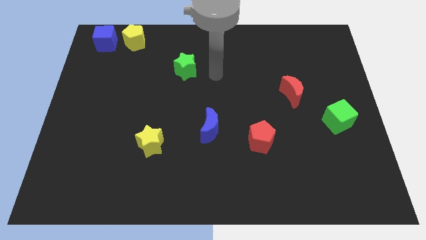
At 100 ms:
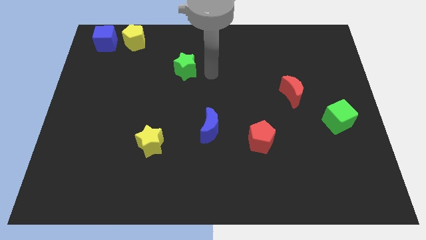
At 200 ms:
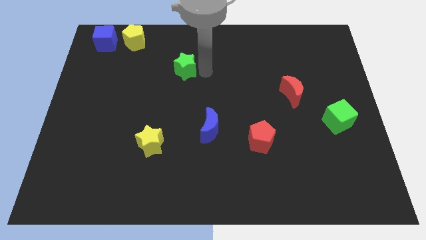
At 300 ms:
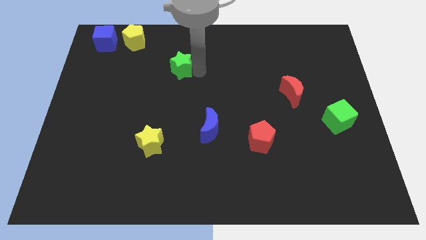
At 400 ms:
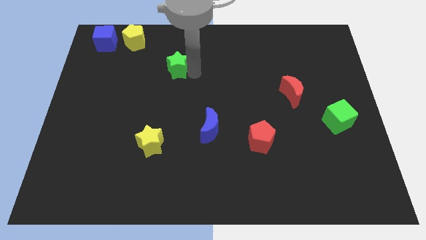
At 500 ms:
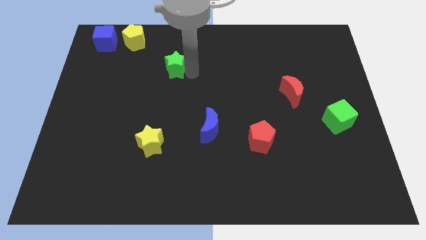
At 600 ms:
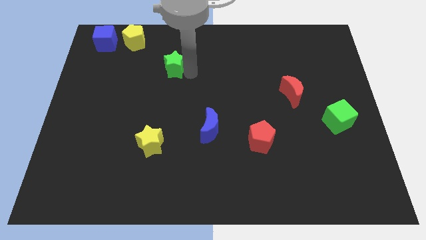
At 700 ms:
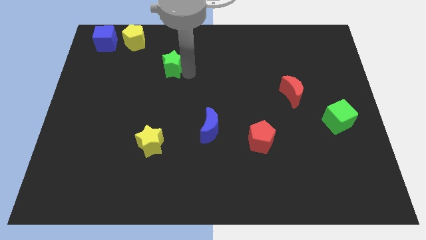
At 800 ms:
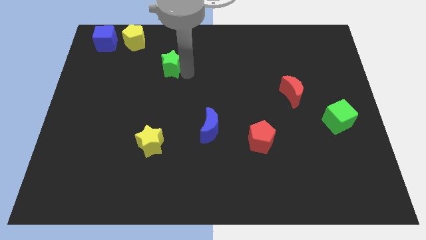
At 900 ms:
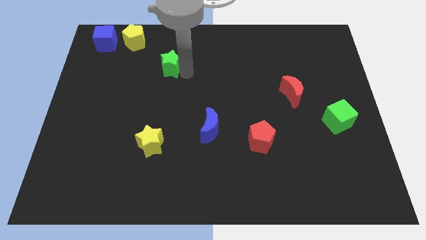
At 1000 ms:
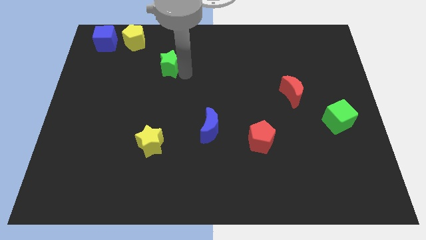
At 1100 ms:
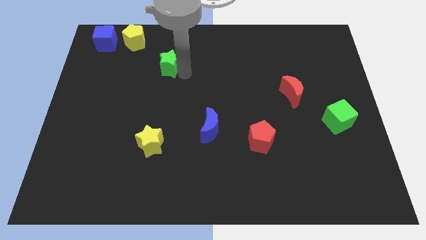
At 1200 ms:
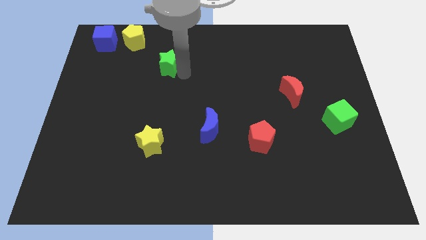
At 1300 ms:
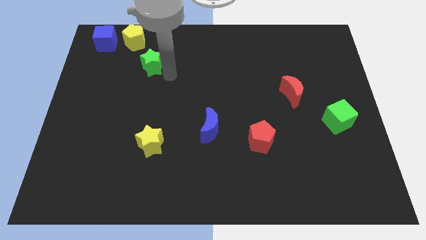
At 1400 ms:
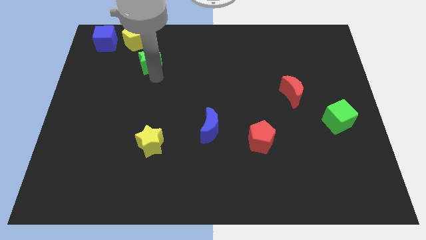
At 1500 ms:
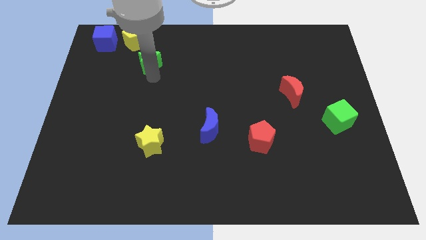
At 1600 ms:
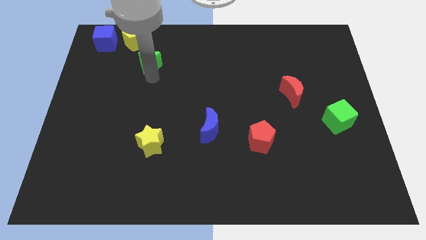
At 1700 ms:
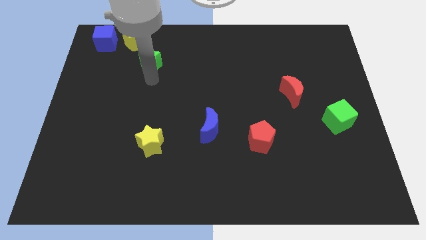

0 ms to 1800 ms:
place the green star vertically above the yellow star

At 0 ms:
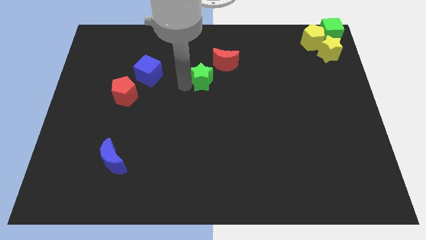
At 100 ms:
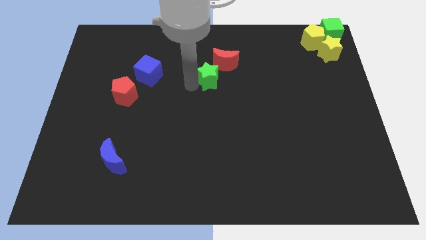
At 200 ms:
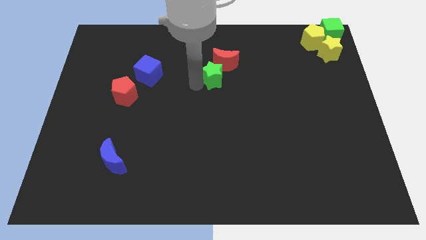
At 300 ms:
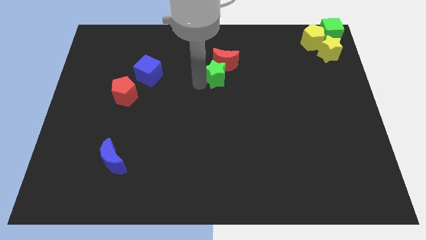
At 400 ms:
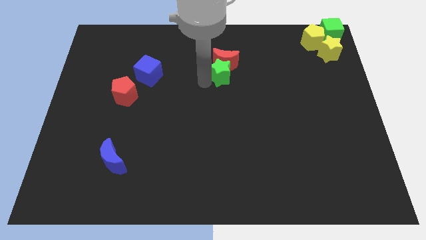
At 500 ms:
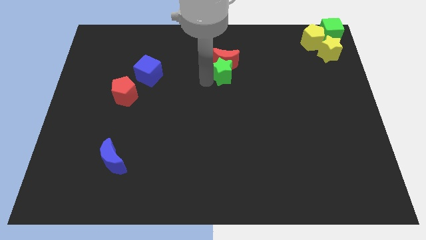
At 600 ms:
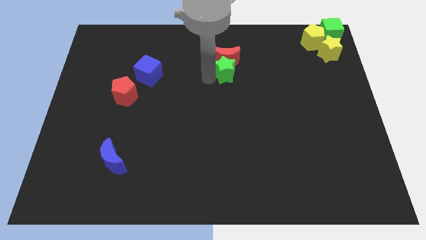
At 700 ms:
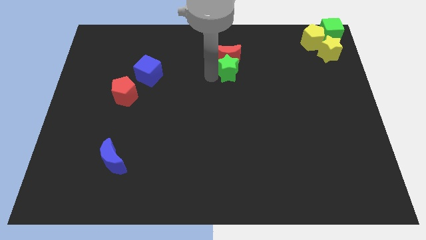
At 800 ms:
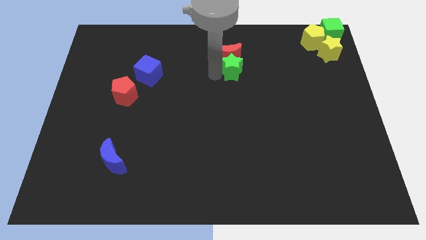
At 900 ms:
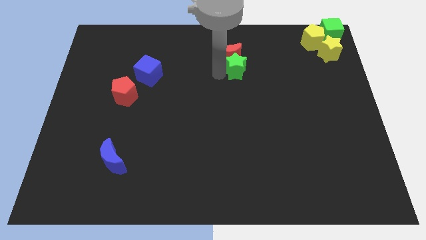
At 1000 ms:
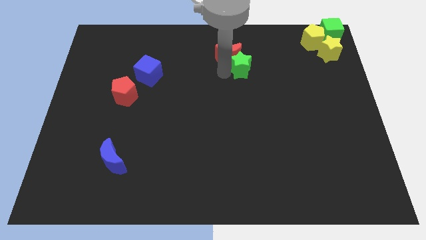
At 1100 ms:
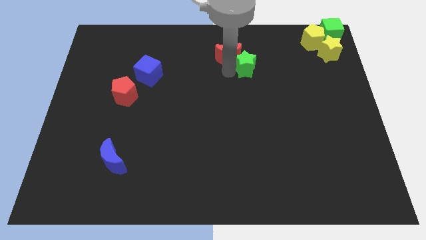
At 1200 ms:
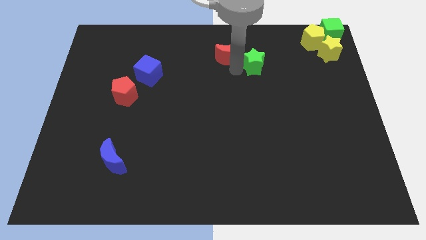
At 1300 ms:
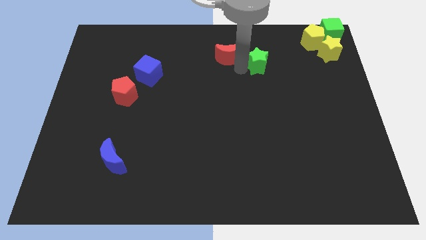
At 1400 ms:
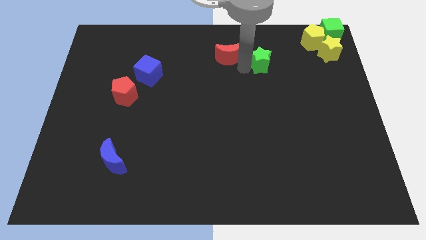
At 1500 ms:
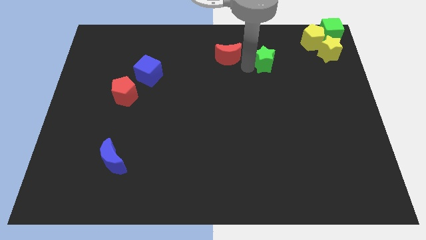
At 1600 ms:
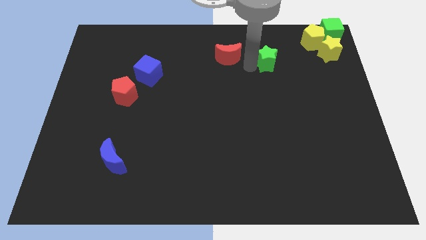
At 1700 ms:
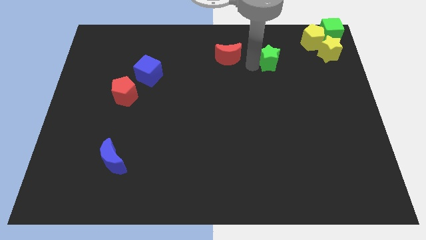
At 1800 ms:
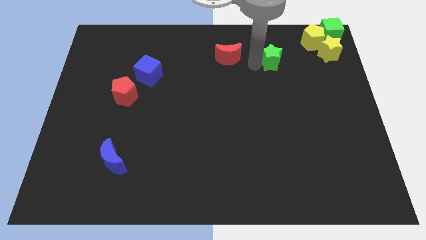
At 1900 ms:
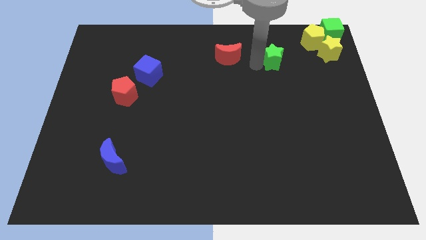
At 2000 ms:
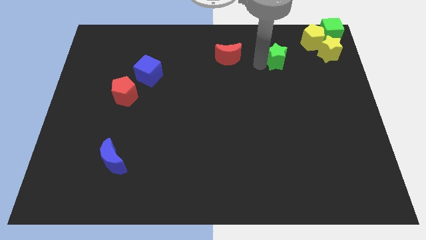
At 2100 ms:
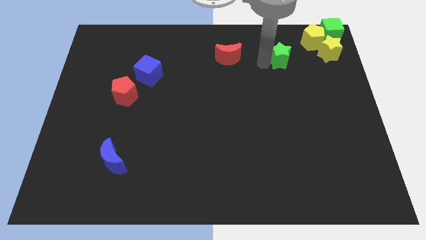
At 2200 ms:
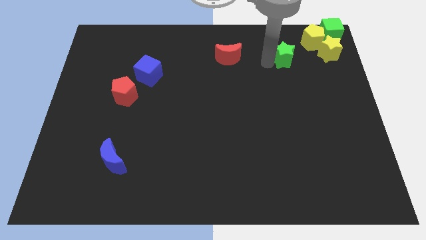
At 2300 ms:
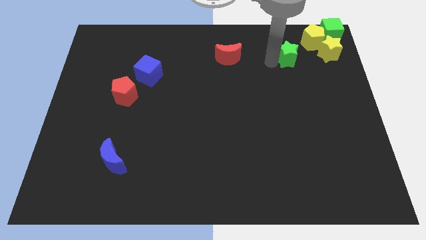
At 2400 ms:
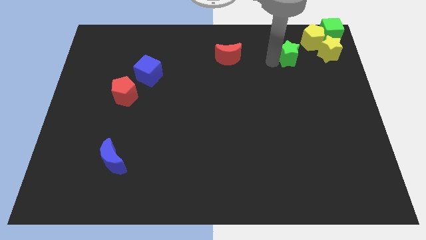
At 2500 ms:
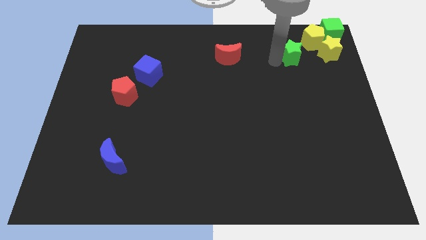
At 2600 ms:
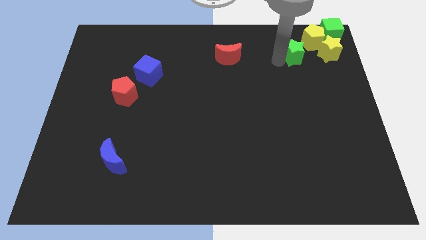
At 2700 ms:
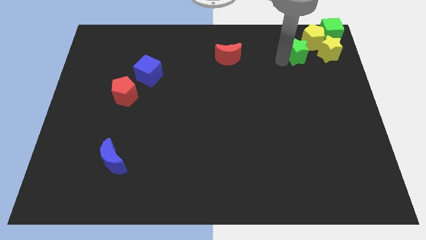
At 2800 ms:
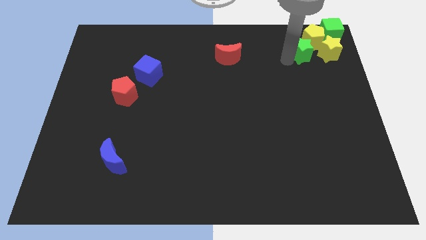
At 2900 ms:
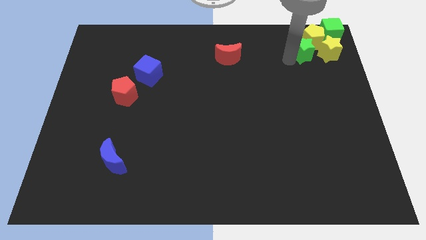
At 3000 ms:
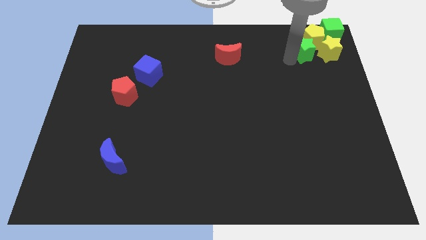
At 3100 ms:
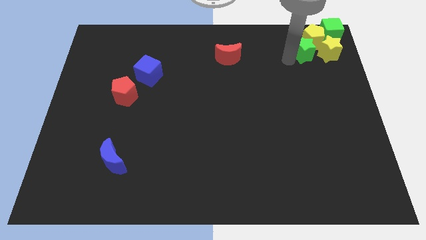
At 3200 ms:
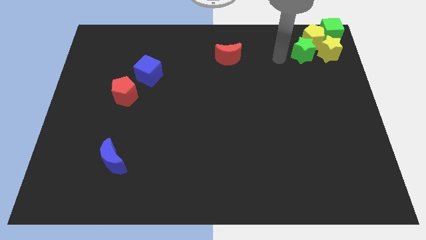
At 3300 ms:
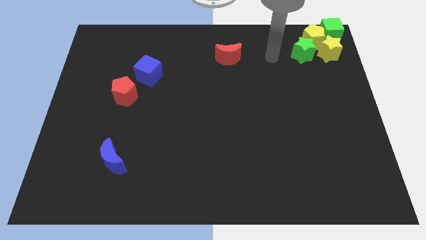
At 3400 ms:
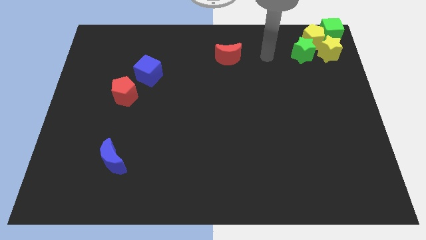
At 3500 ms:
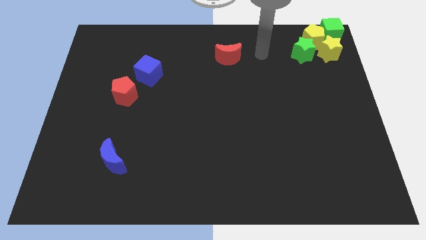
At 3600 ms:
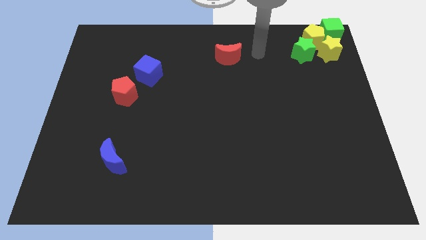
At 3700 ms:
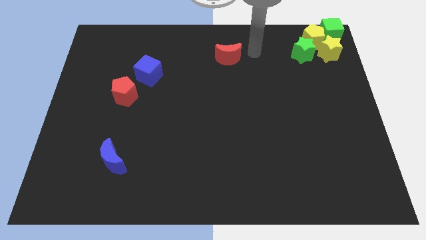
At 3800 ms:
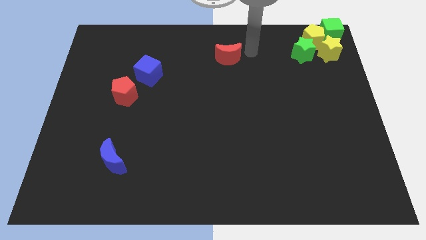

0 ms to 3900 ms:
place the green star in between the yellow blocks

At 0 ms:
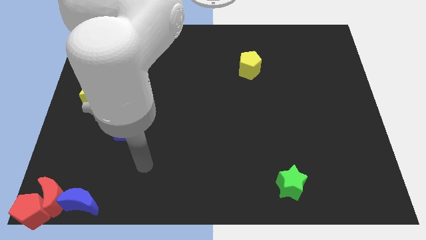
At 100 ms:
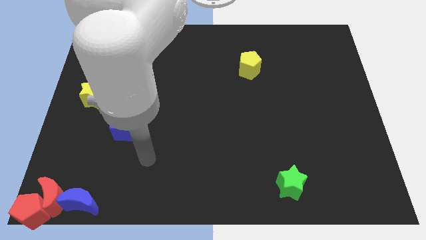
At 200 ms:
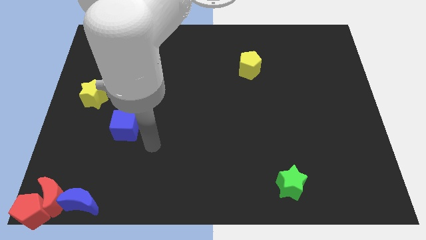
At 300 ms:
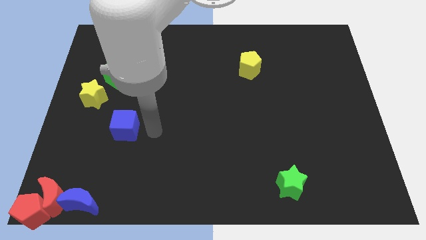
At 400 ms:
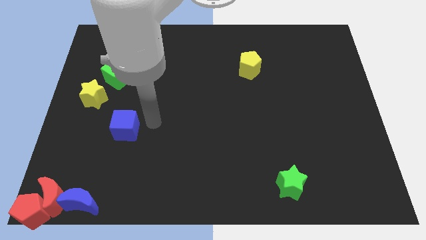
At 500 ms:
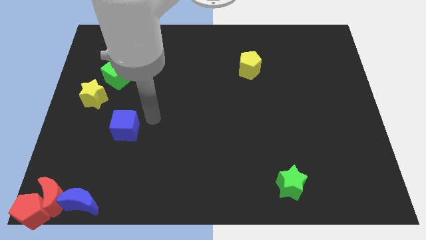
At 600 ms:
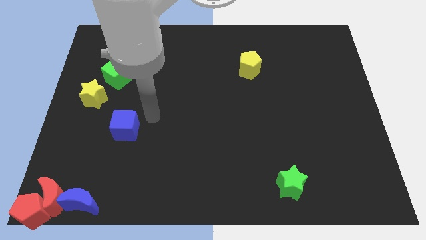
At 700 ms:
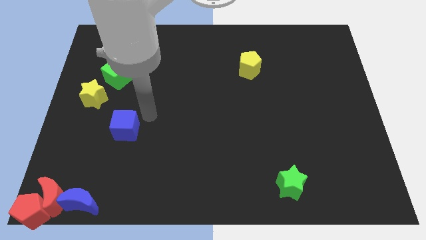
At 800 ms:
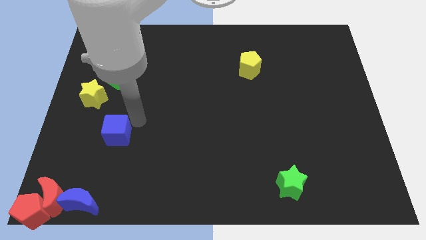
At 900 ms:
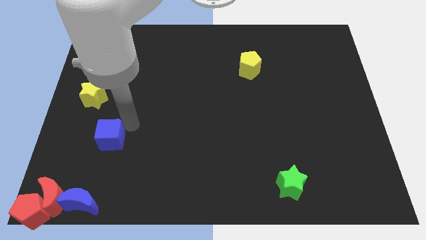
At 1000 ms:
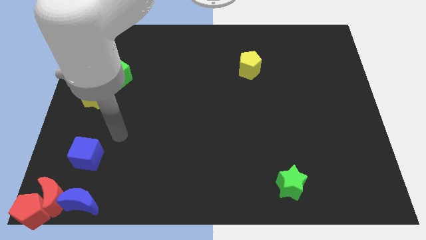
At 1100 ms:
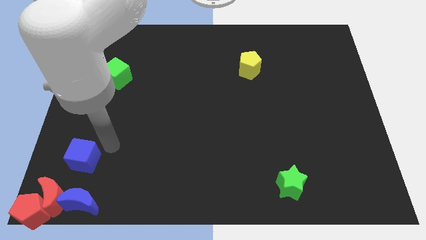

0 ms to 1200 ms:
put the blue cube vertically below the yellow star

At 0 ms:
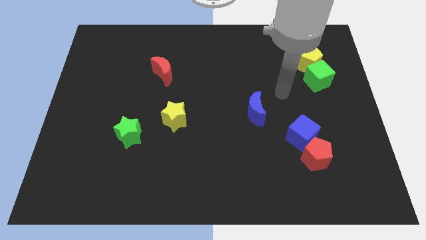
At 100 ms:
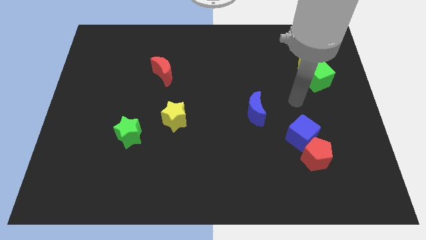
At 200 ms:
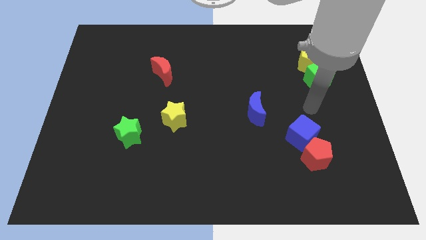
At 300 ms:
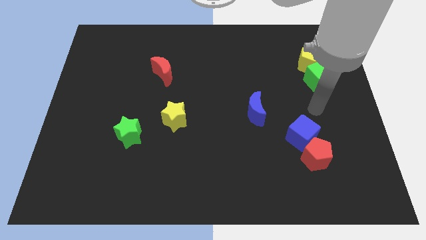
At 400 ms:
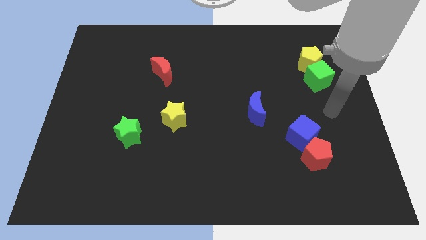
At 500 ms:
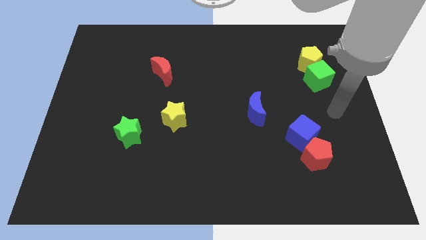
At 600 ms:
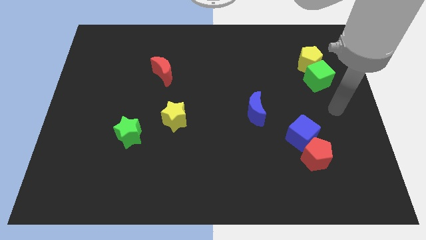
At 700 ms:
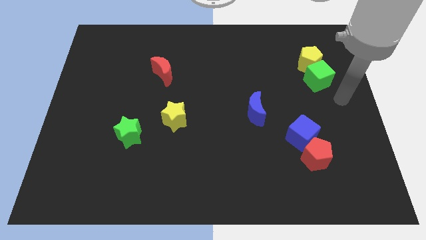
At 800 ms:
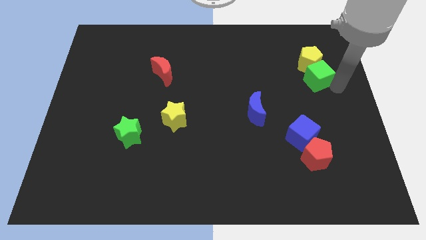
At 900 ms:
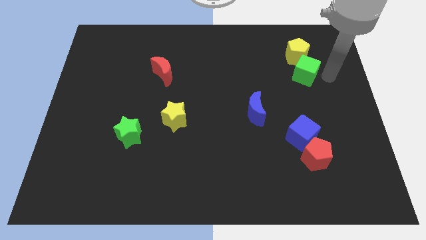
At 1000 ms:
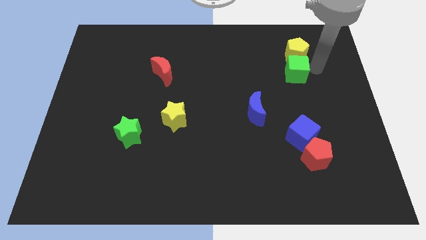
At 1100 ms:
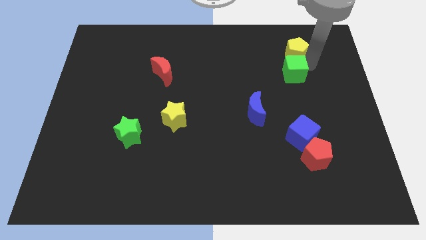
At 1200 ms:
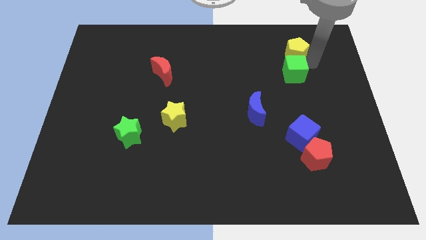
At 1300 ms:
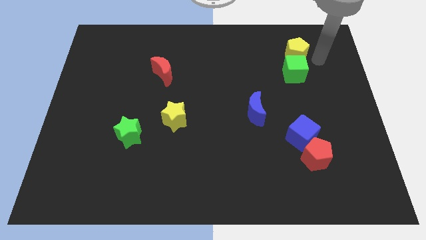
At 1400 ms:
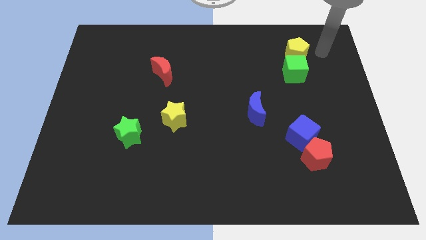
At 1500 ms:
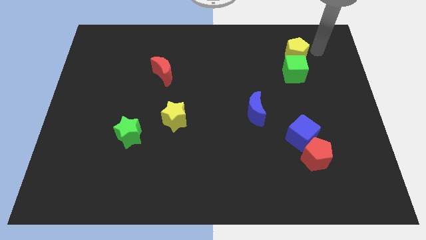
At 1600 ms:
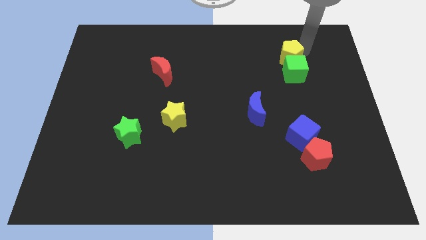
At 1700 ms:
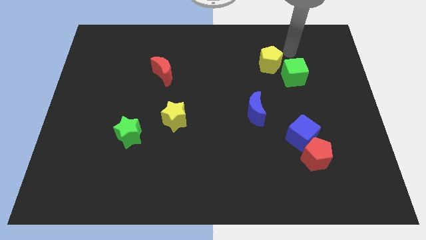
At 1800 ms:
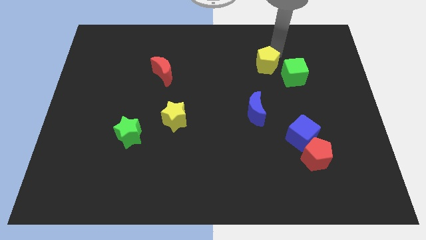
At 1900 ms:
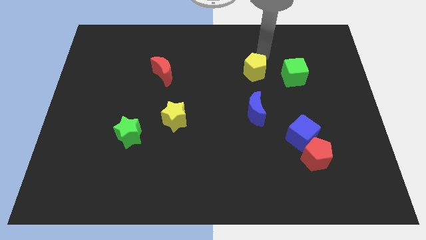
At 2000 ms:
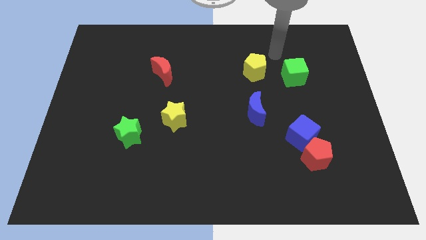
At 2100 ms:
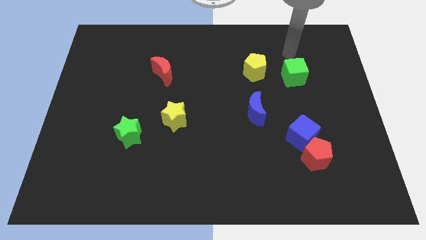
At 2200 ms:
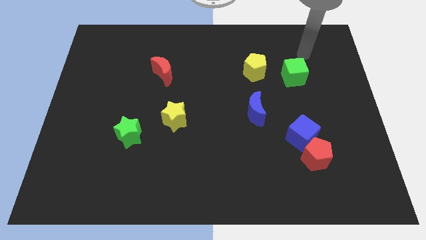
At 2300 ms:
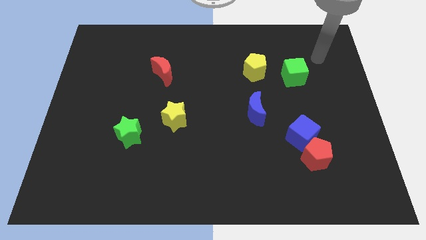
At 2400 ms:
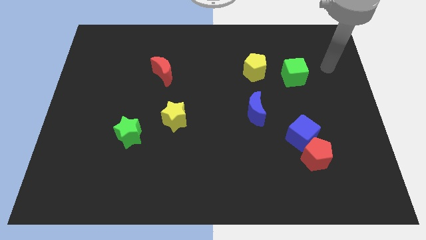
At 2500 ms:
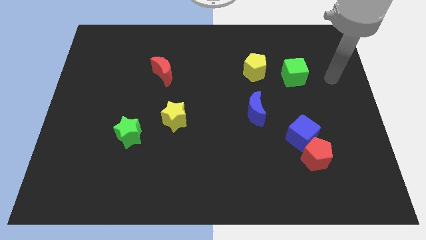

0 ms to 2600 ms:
push the yellow pentagon to the top side of the blue crescent
